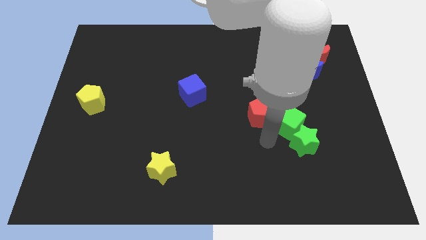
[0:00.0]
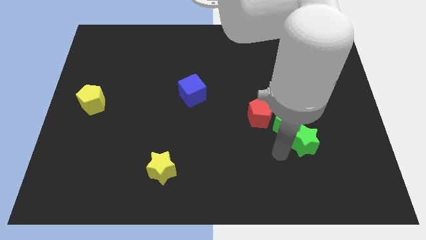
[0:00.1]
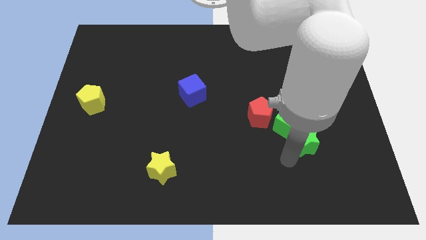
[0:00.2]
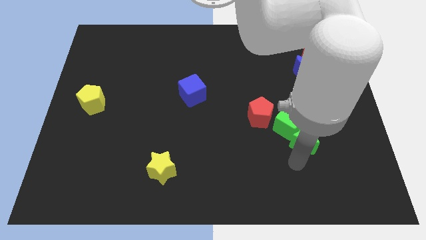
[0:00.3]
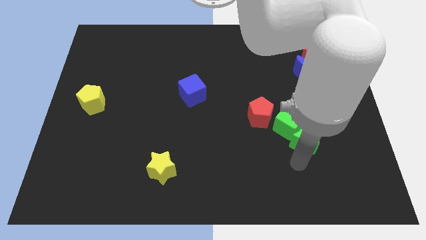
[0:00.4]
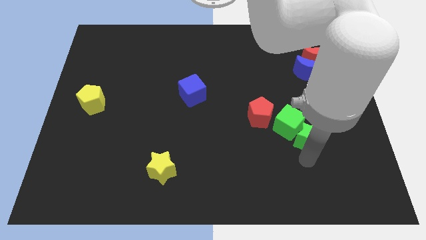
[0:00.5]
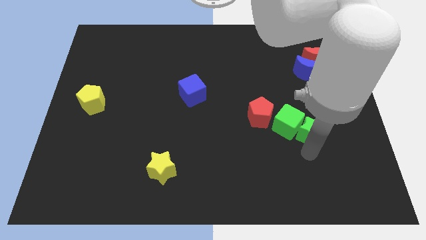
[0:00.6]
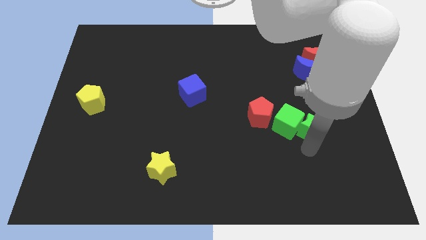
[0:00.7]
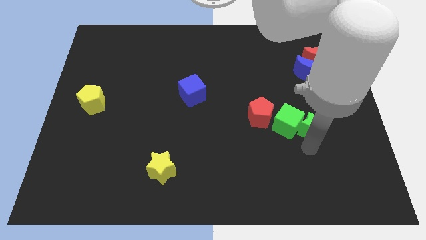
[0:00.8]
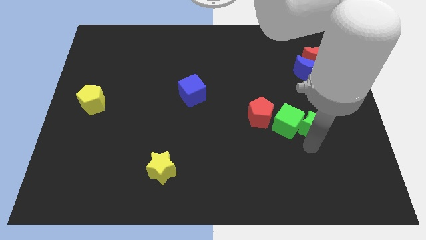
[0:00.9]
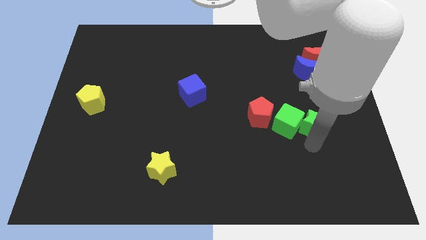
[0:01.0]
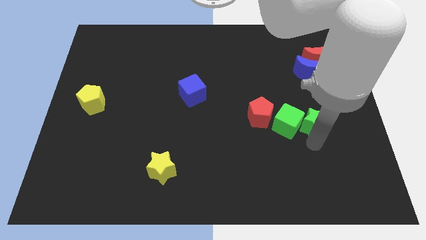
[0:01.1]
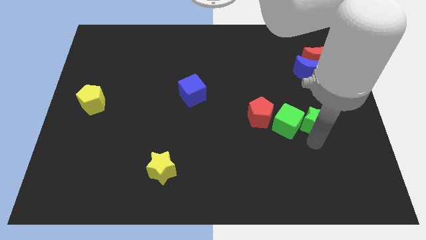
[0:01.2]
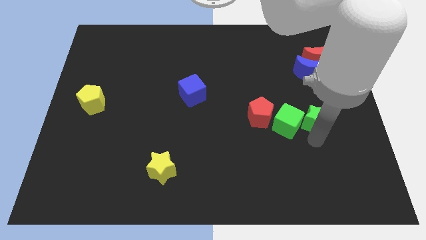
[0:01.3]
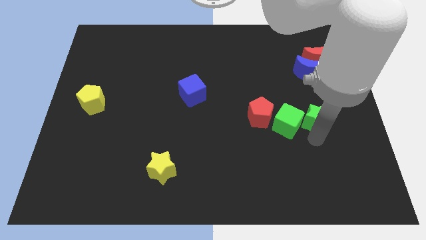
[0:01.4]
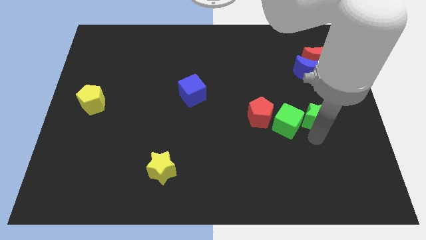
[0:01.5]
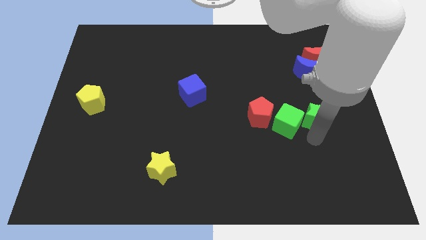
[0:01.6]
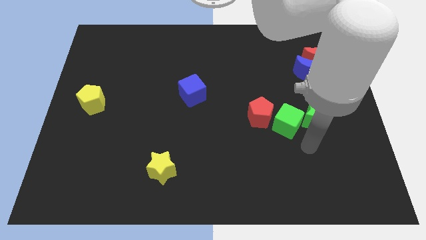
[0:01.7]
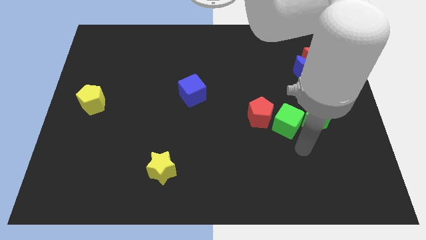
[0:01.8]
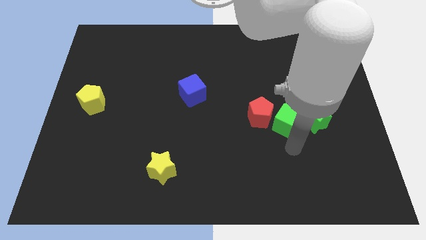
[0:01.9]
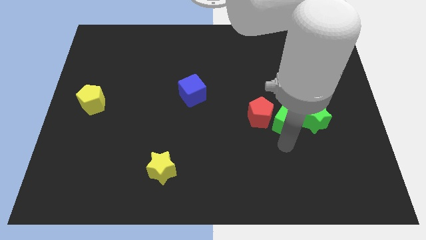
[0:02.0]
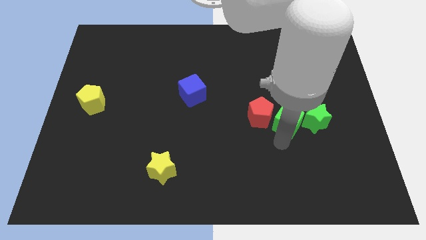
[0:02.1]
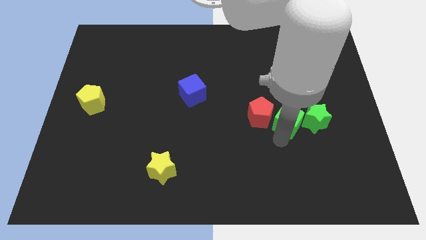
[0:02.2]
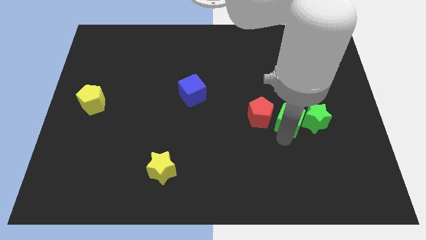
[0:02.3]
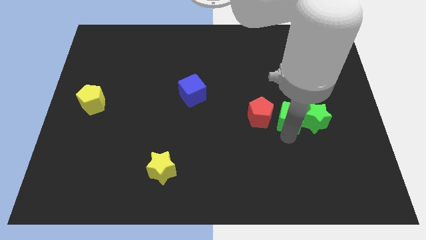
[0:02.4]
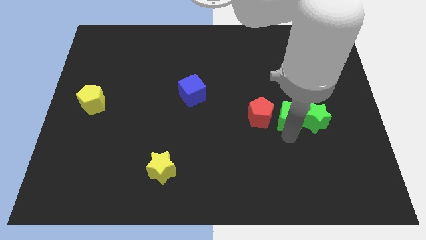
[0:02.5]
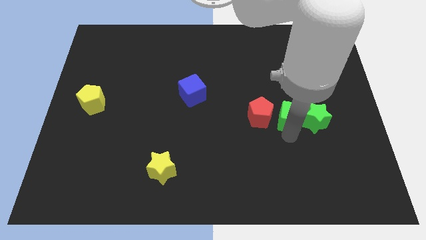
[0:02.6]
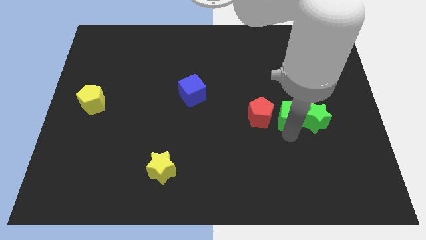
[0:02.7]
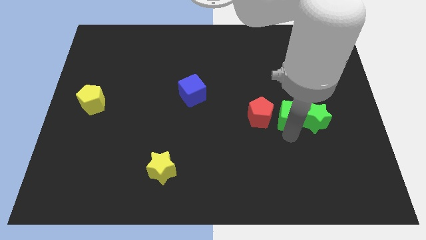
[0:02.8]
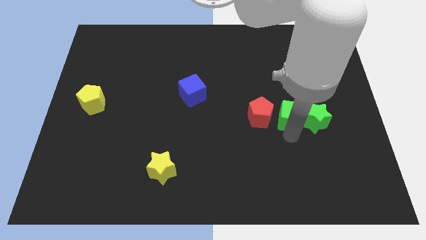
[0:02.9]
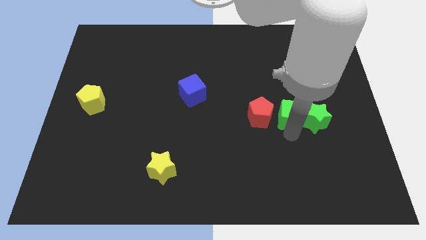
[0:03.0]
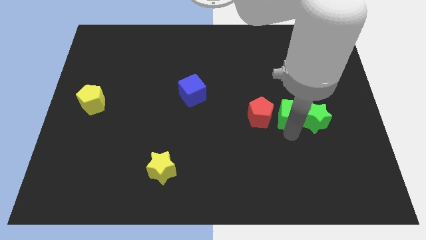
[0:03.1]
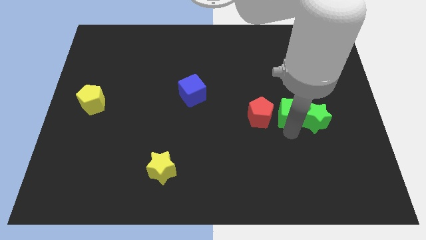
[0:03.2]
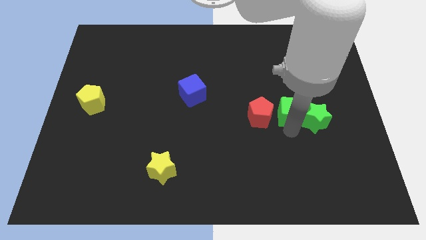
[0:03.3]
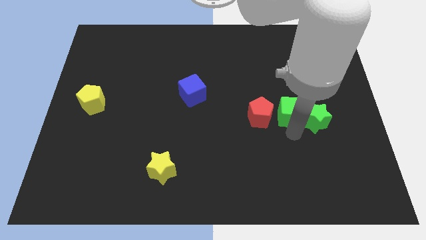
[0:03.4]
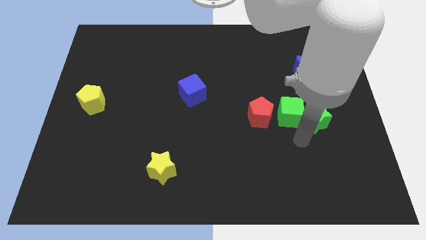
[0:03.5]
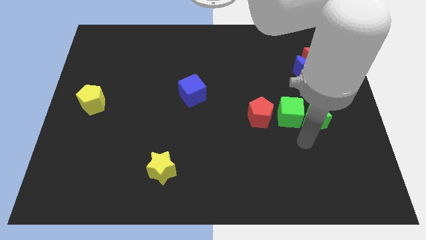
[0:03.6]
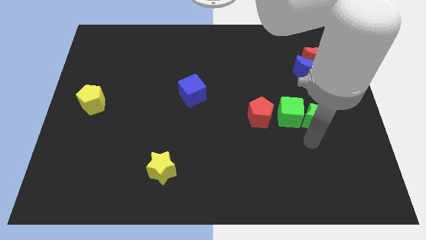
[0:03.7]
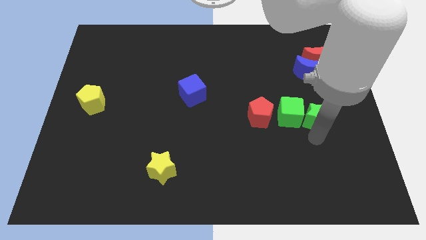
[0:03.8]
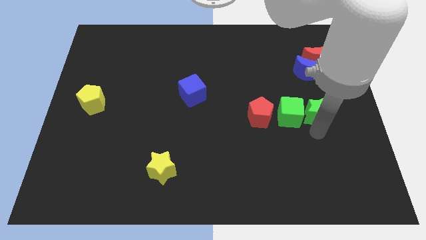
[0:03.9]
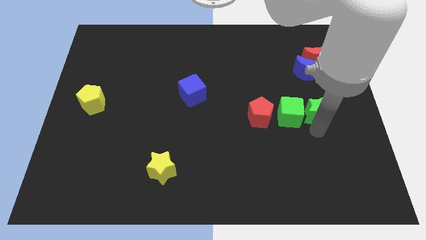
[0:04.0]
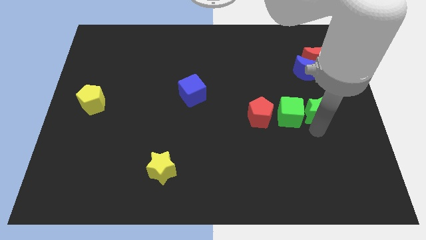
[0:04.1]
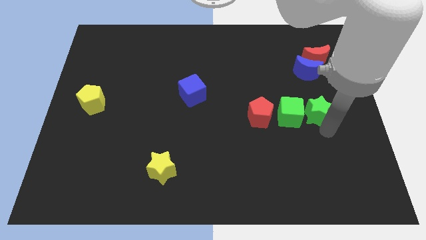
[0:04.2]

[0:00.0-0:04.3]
push the green star and green cube to the right of the red pentagon

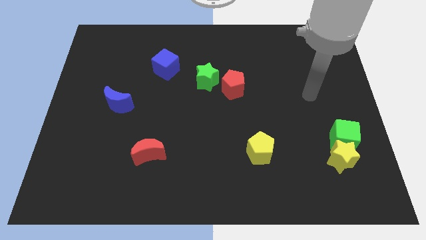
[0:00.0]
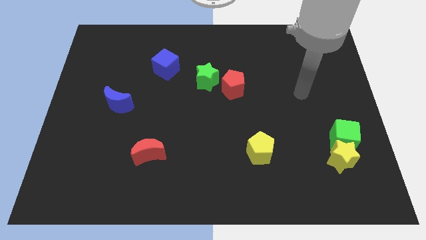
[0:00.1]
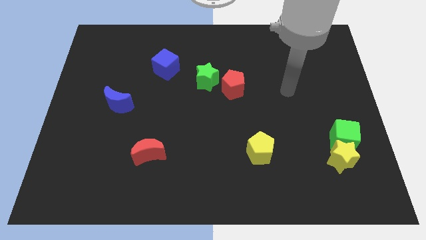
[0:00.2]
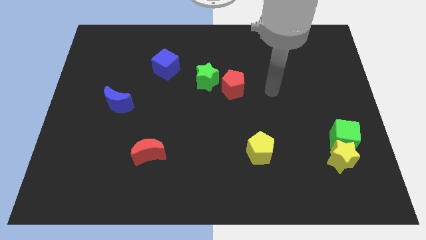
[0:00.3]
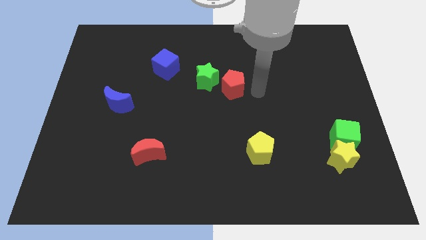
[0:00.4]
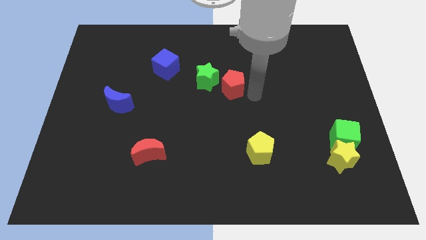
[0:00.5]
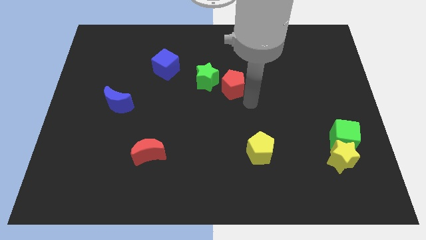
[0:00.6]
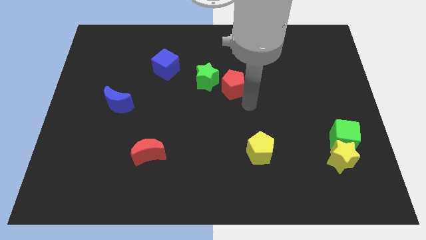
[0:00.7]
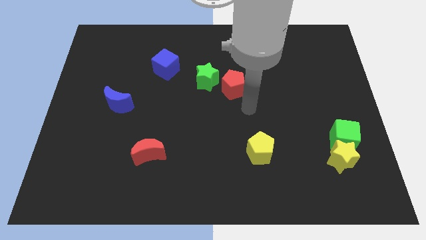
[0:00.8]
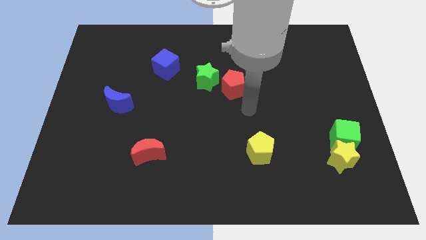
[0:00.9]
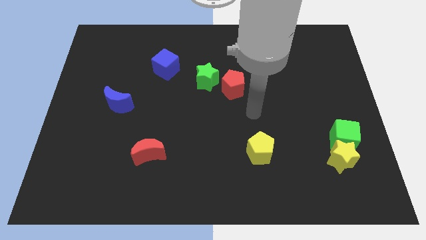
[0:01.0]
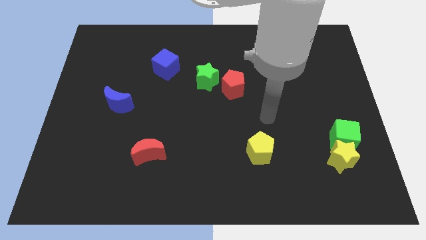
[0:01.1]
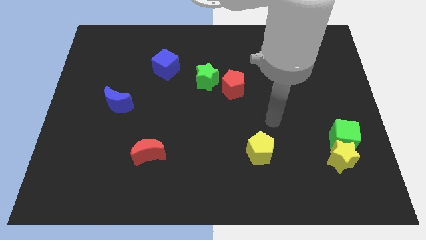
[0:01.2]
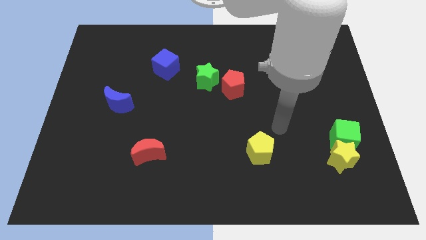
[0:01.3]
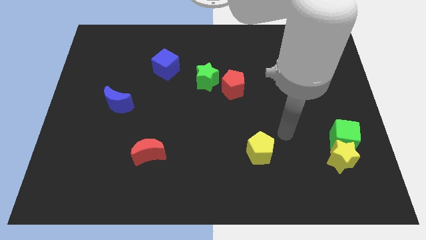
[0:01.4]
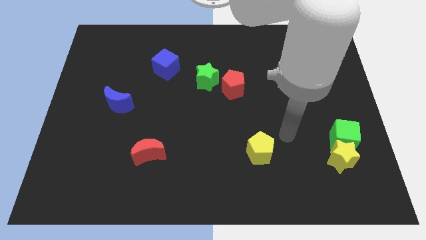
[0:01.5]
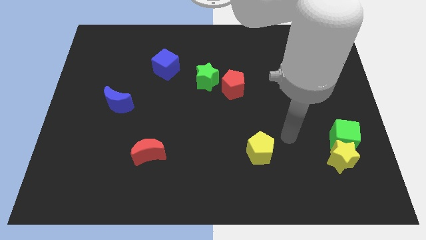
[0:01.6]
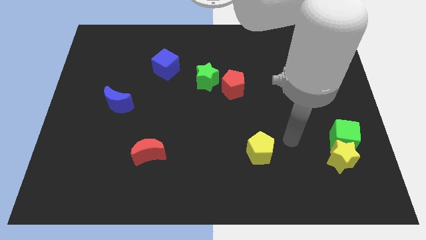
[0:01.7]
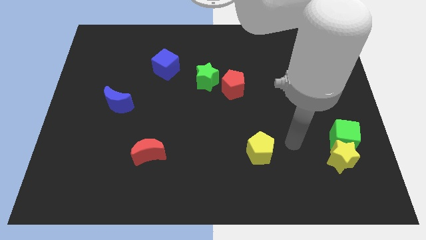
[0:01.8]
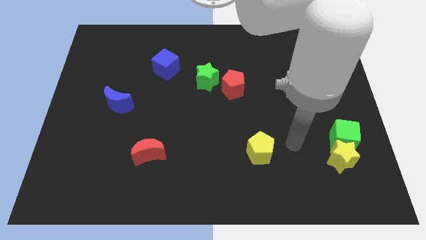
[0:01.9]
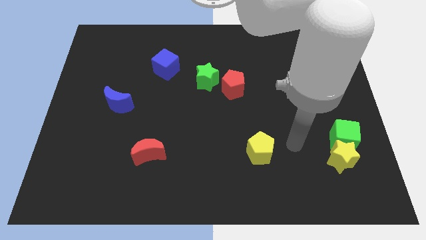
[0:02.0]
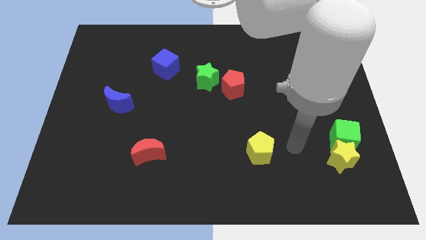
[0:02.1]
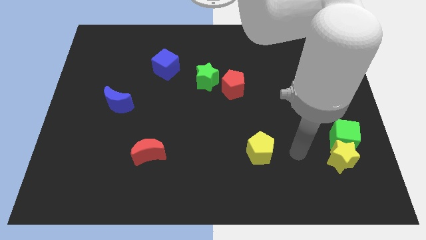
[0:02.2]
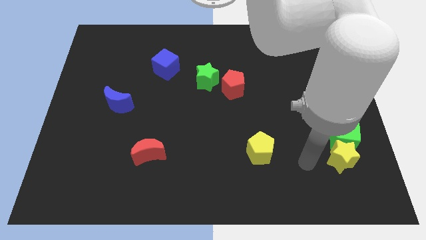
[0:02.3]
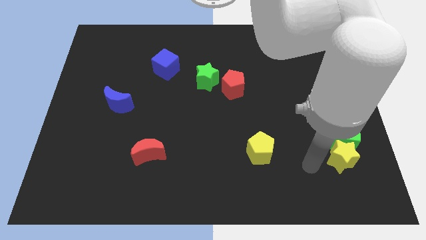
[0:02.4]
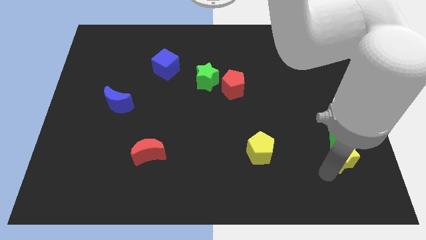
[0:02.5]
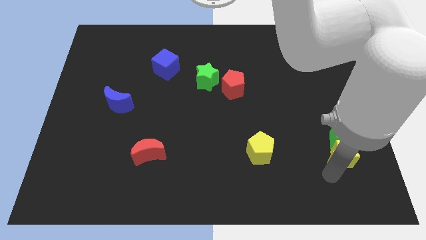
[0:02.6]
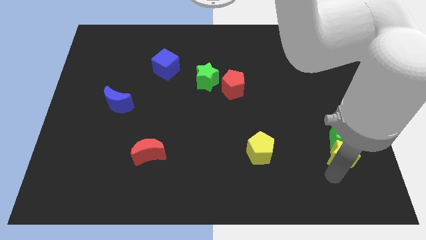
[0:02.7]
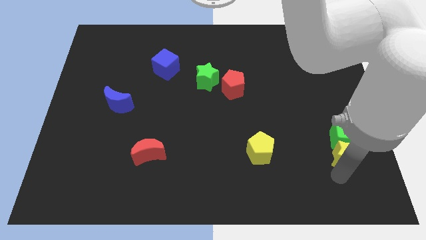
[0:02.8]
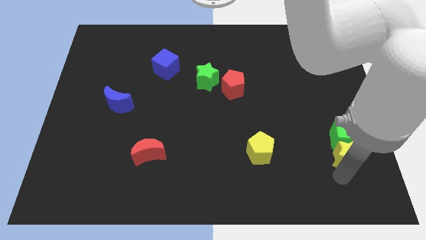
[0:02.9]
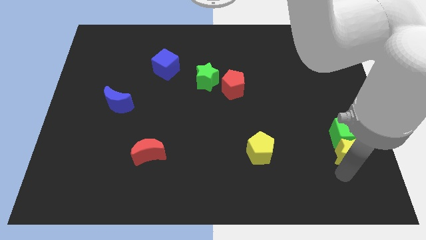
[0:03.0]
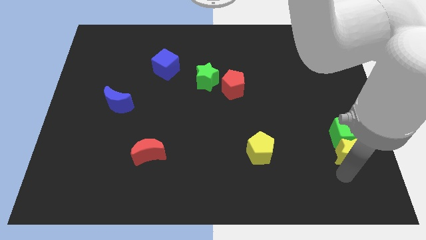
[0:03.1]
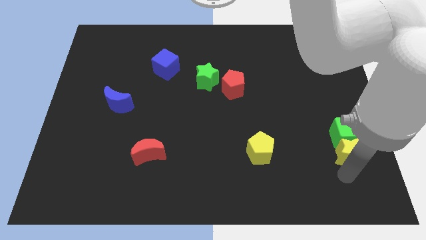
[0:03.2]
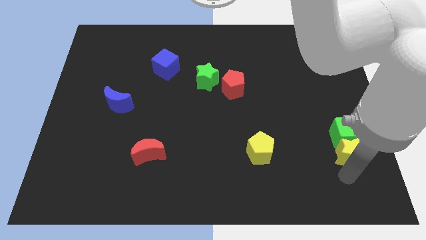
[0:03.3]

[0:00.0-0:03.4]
slightly push the yellow star and green cube upwards

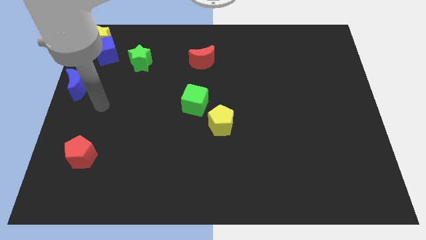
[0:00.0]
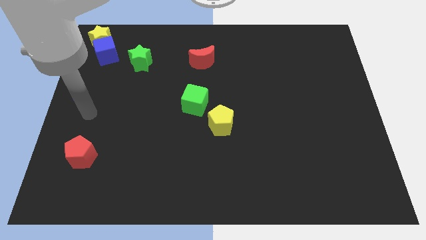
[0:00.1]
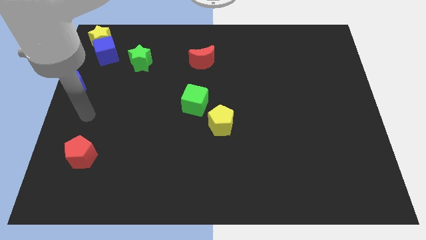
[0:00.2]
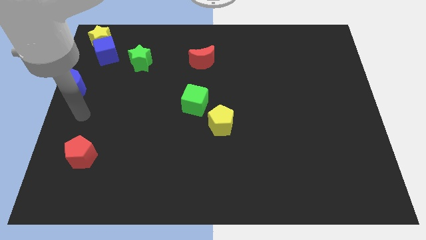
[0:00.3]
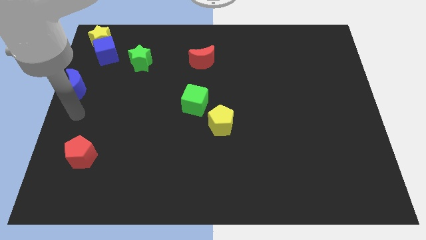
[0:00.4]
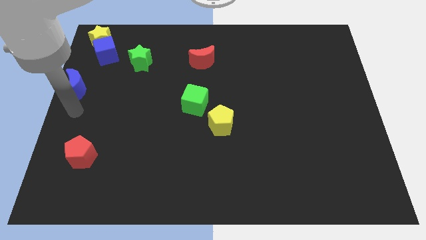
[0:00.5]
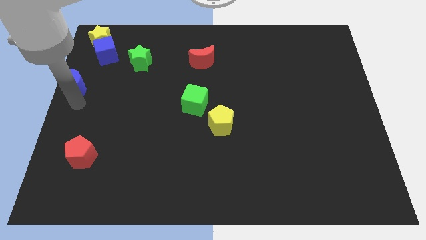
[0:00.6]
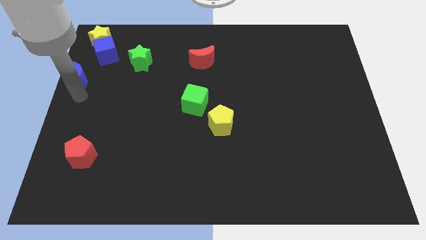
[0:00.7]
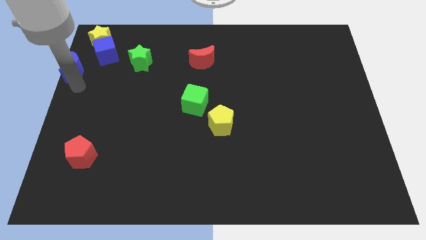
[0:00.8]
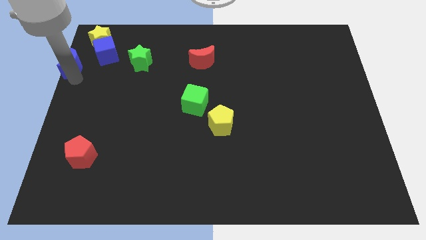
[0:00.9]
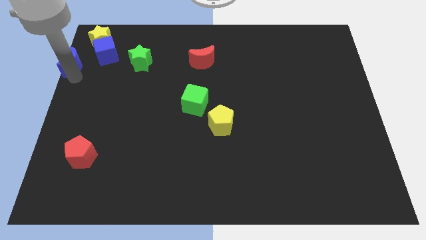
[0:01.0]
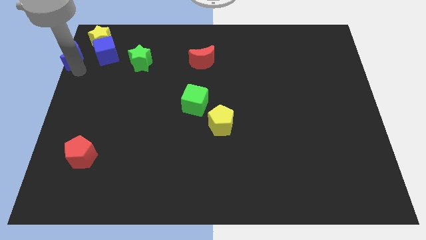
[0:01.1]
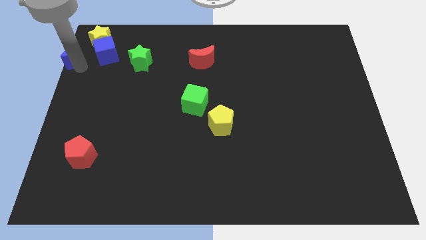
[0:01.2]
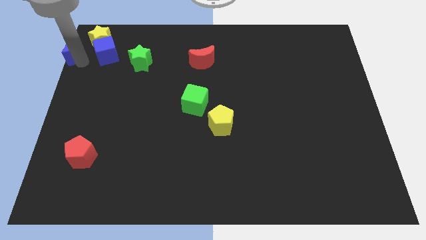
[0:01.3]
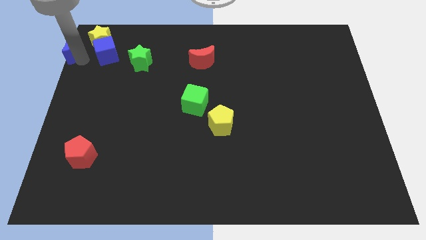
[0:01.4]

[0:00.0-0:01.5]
slide the blue moon parallel left to the blue cube
